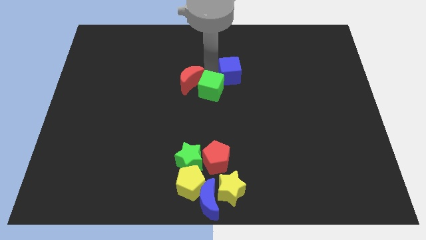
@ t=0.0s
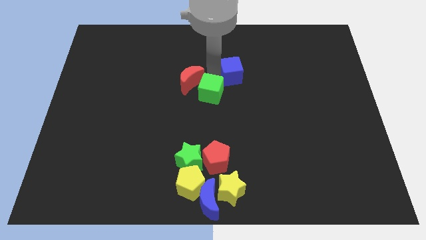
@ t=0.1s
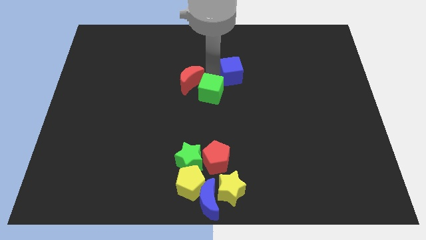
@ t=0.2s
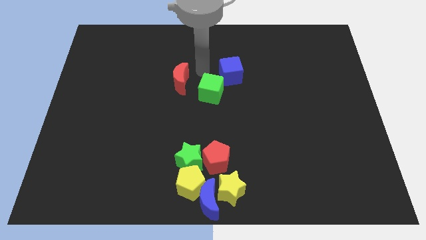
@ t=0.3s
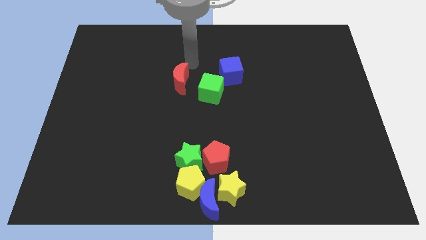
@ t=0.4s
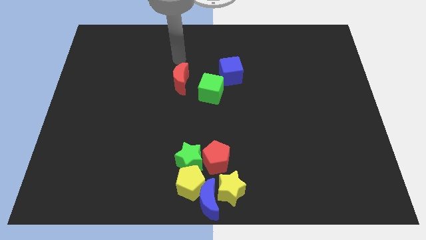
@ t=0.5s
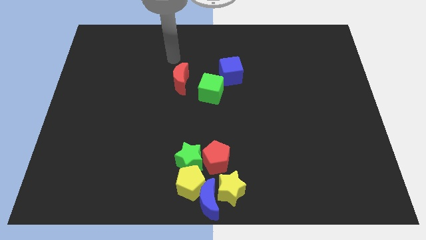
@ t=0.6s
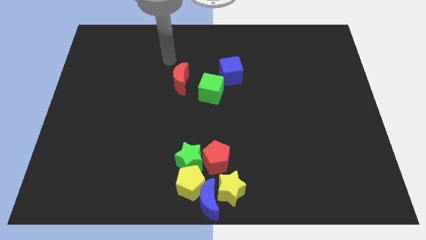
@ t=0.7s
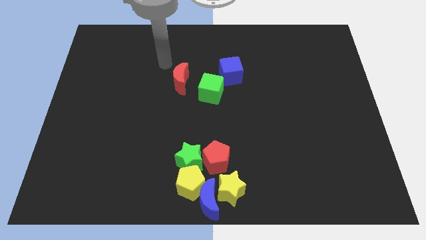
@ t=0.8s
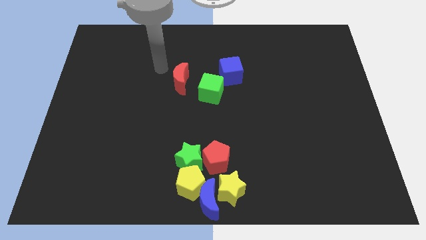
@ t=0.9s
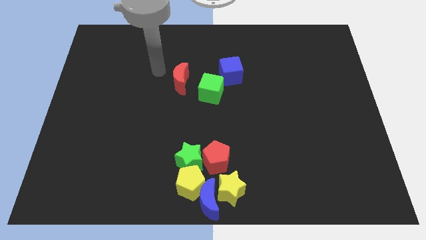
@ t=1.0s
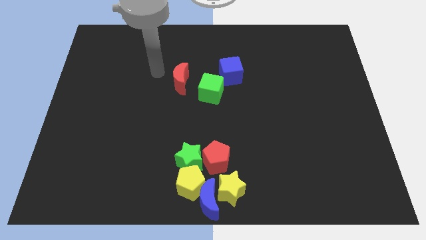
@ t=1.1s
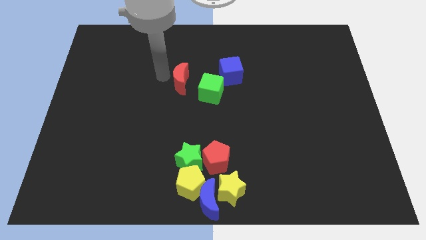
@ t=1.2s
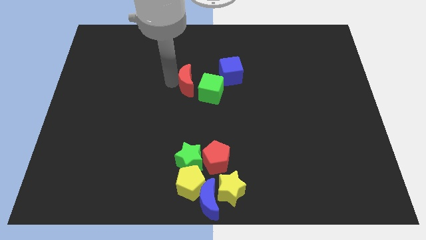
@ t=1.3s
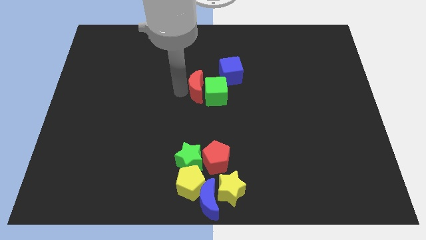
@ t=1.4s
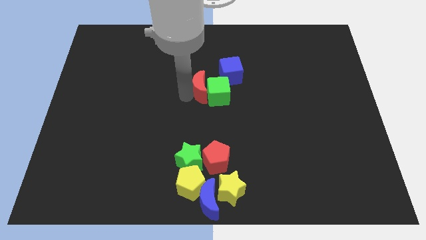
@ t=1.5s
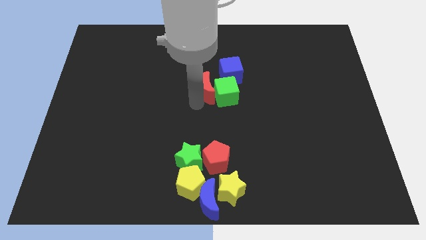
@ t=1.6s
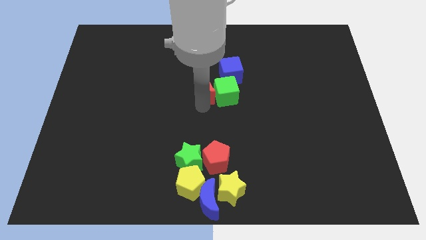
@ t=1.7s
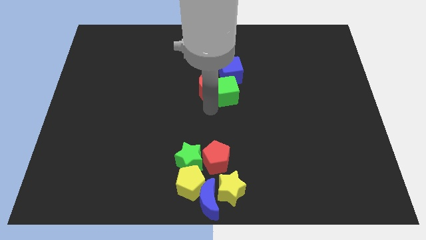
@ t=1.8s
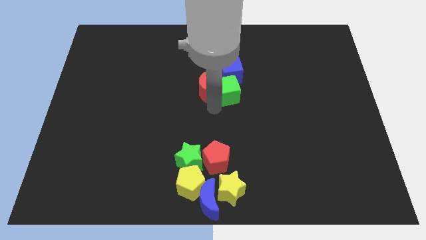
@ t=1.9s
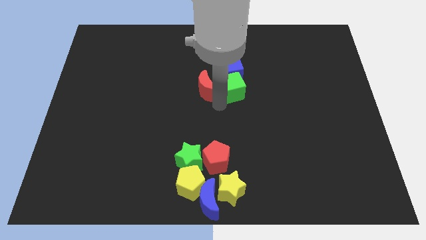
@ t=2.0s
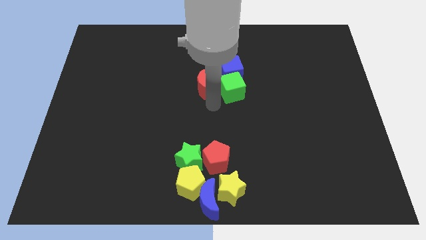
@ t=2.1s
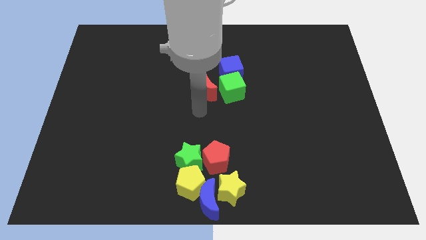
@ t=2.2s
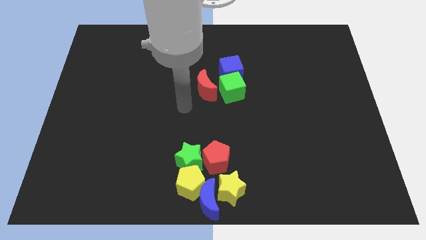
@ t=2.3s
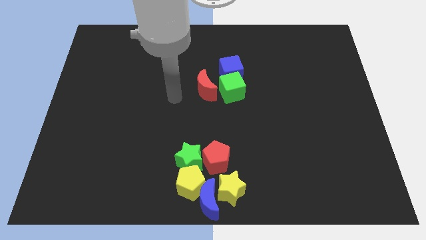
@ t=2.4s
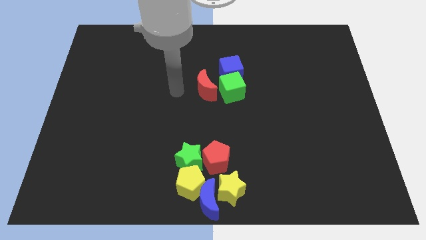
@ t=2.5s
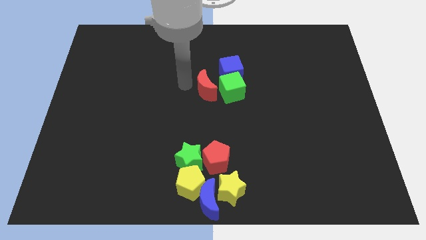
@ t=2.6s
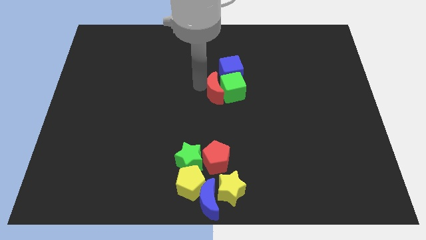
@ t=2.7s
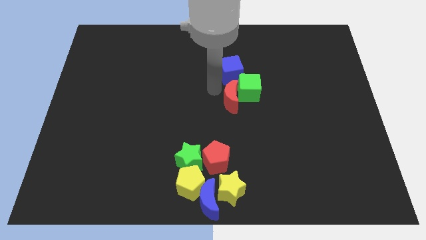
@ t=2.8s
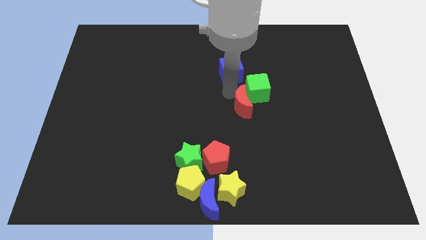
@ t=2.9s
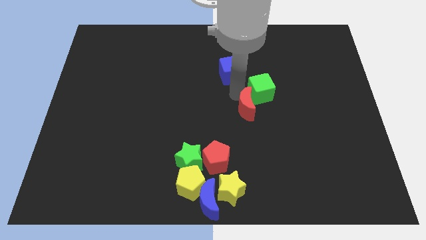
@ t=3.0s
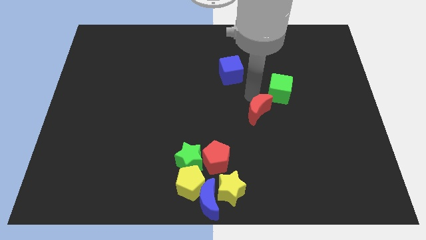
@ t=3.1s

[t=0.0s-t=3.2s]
move the red crescent along with the green cube to the right side

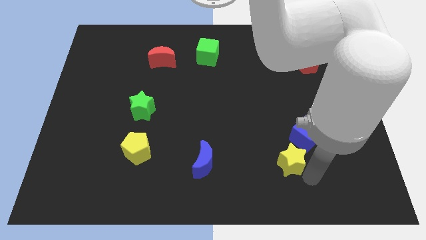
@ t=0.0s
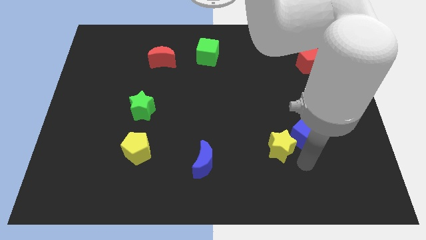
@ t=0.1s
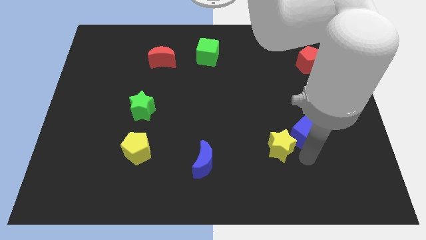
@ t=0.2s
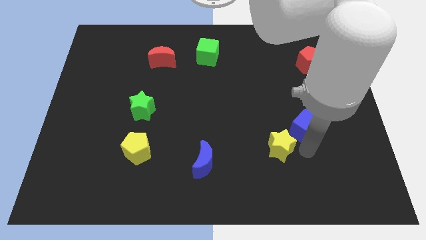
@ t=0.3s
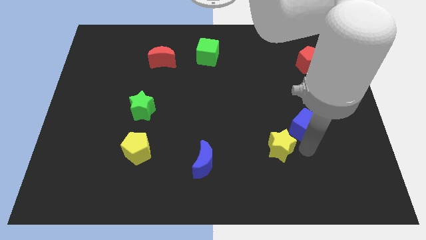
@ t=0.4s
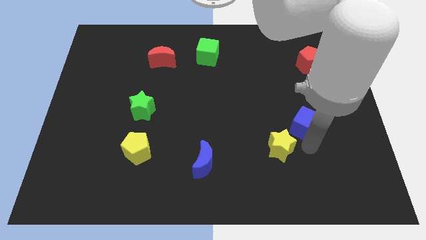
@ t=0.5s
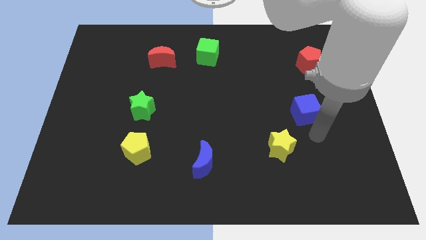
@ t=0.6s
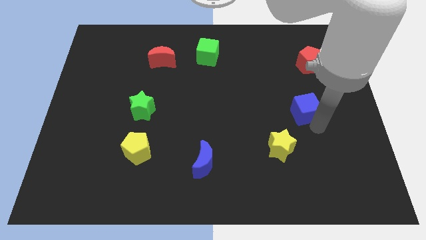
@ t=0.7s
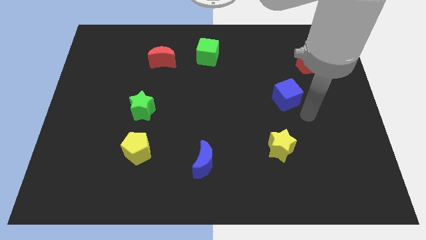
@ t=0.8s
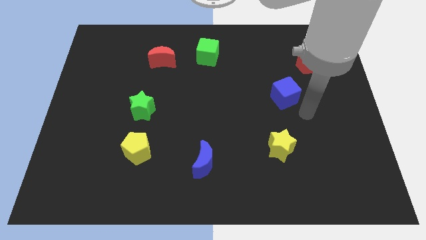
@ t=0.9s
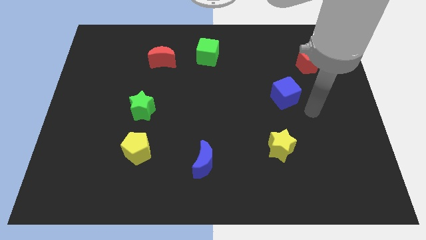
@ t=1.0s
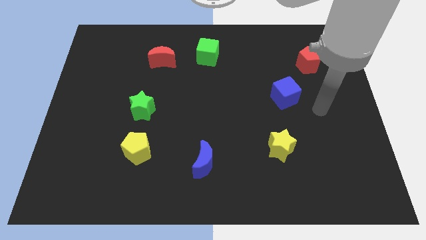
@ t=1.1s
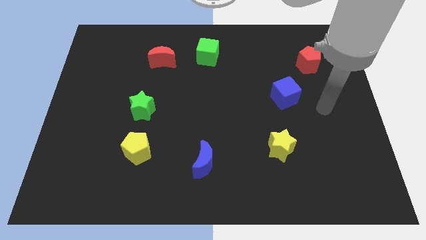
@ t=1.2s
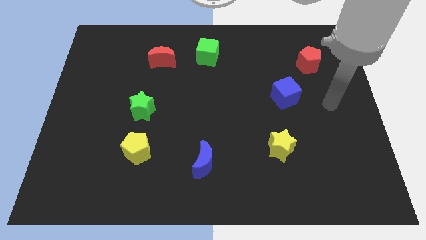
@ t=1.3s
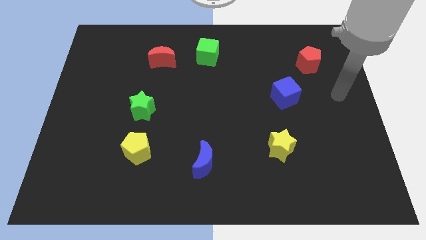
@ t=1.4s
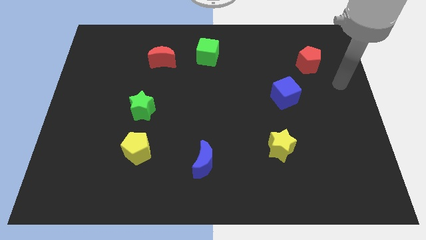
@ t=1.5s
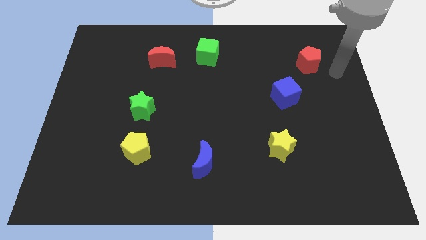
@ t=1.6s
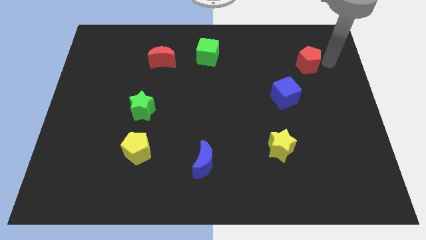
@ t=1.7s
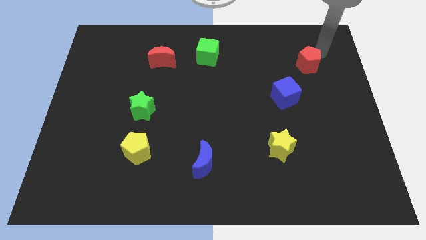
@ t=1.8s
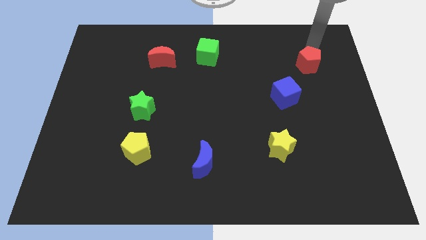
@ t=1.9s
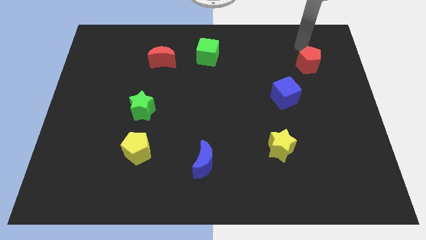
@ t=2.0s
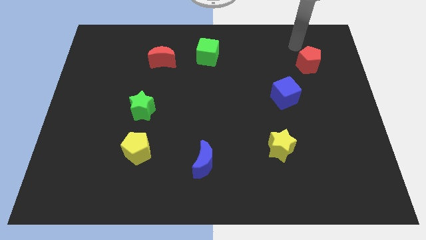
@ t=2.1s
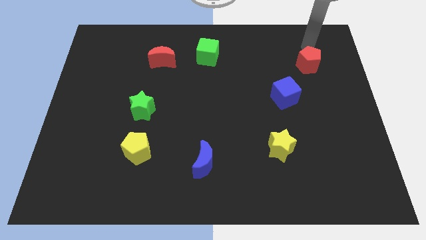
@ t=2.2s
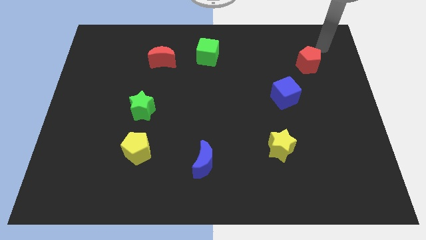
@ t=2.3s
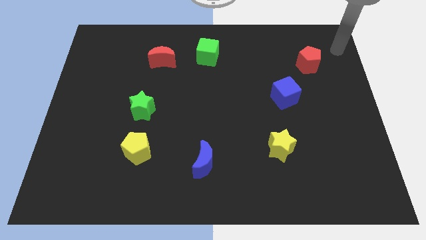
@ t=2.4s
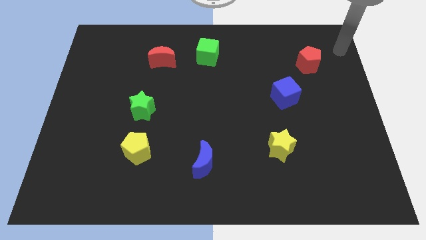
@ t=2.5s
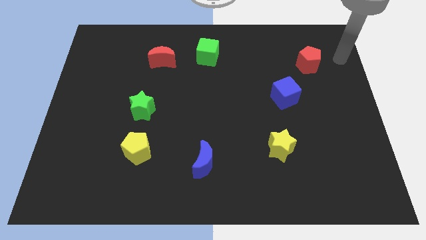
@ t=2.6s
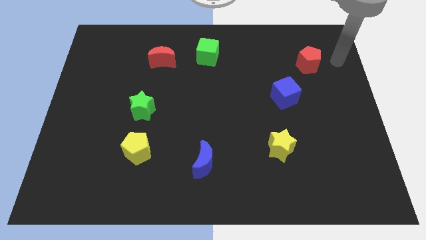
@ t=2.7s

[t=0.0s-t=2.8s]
push the blue cube towards the top side of the board and move away

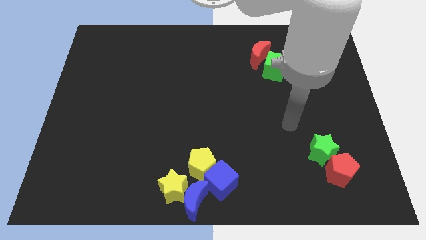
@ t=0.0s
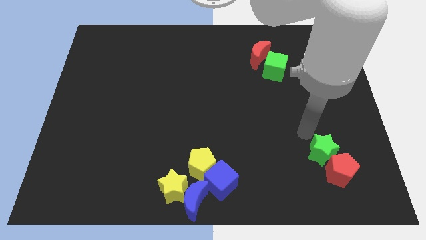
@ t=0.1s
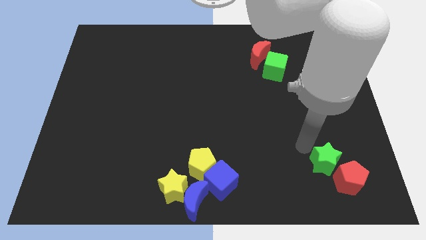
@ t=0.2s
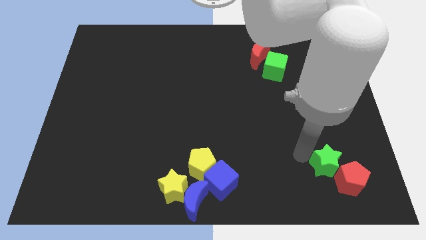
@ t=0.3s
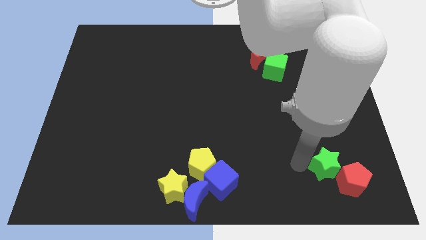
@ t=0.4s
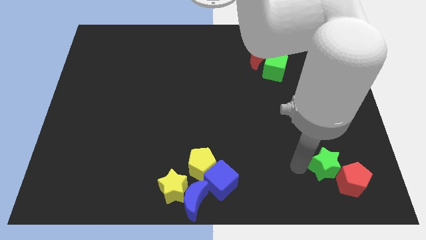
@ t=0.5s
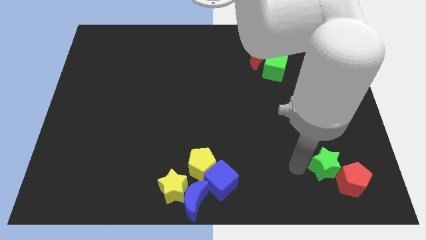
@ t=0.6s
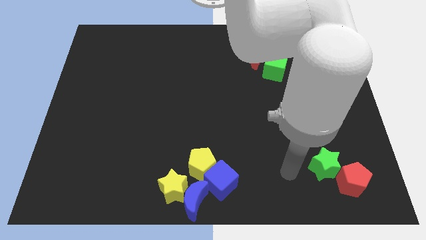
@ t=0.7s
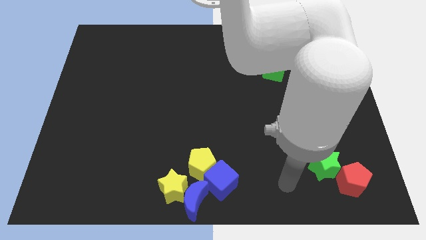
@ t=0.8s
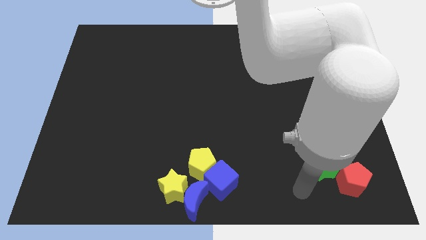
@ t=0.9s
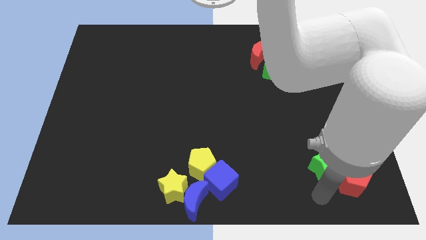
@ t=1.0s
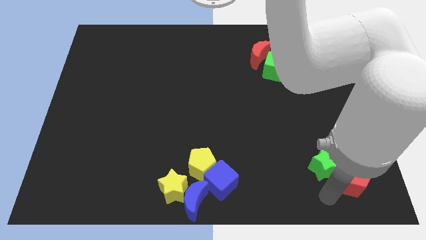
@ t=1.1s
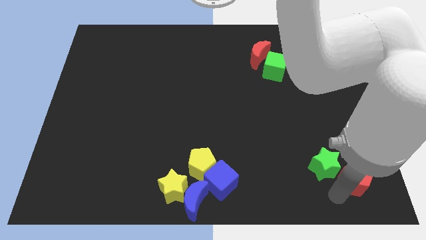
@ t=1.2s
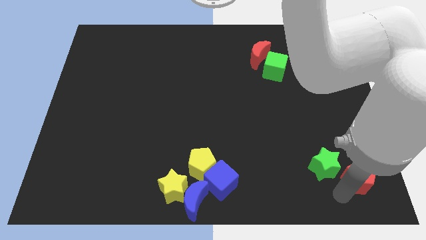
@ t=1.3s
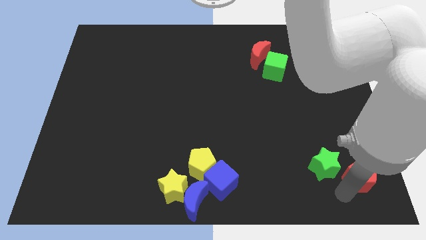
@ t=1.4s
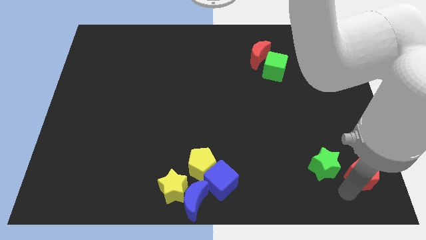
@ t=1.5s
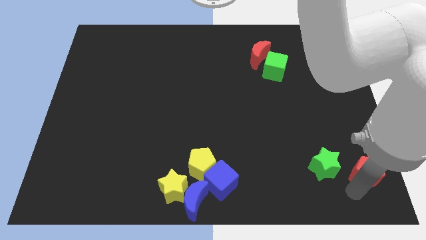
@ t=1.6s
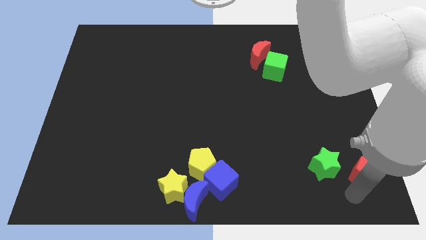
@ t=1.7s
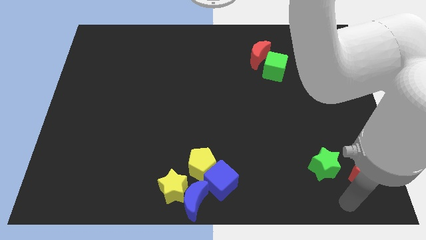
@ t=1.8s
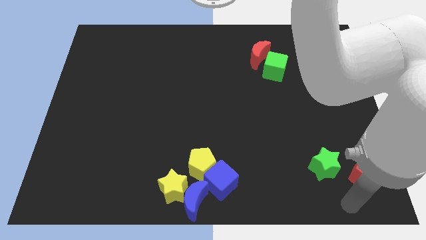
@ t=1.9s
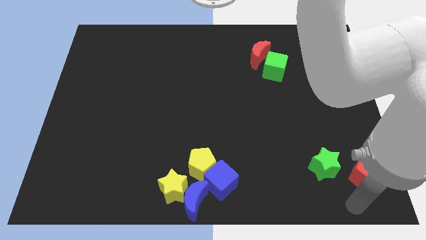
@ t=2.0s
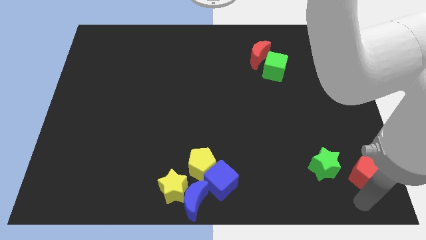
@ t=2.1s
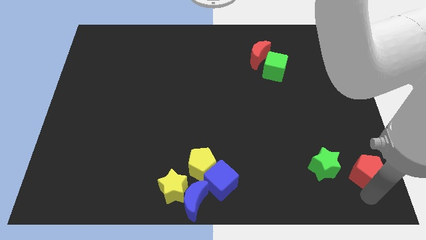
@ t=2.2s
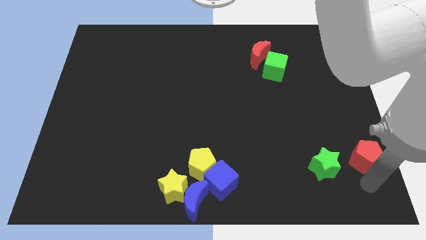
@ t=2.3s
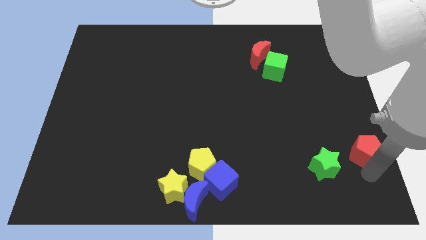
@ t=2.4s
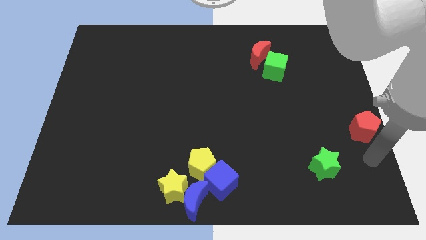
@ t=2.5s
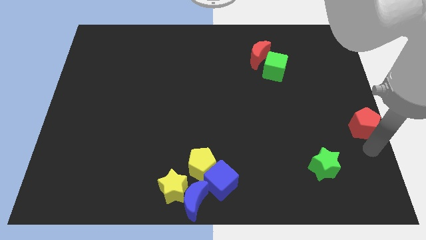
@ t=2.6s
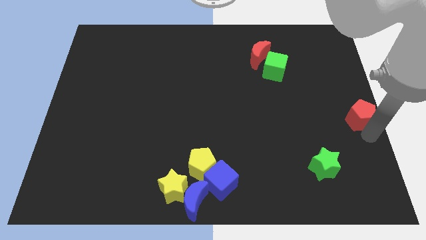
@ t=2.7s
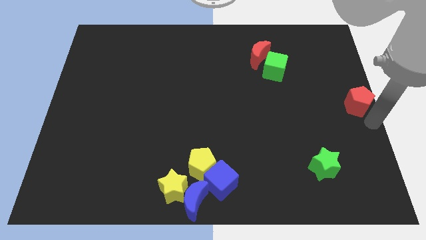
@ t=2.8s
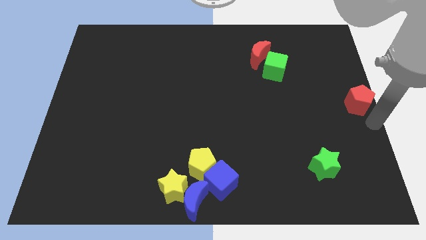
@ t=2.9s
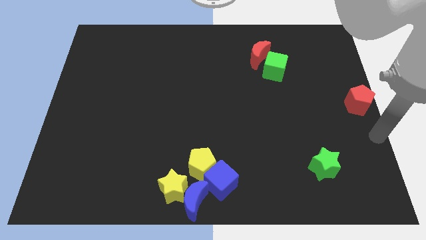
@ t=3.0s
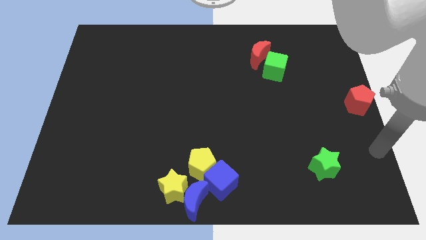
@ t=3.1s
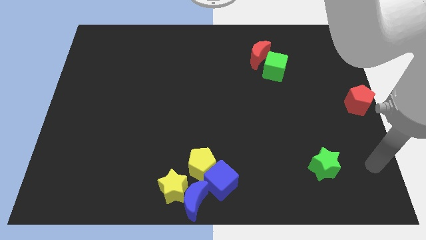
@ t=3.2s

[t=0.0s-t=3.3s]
place the red pentagon at the right center of the board
